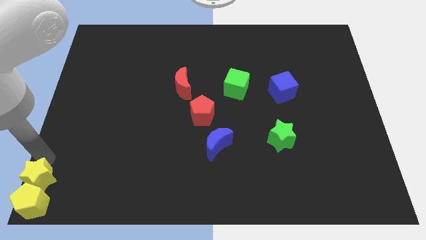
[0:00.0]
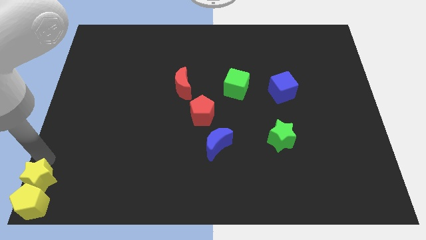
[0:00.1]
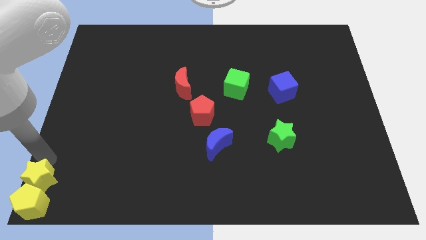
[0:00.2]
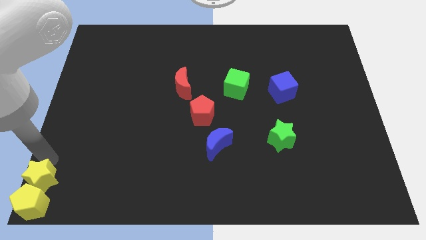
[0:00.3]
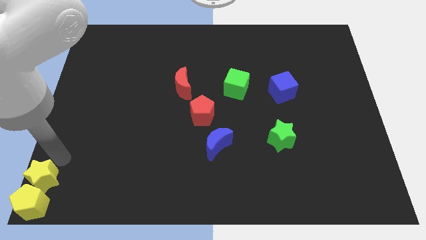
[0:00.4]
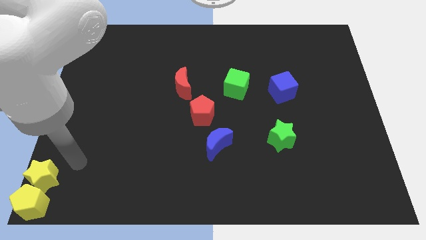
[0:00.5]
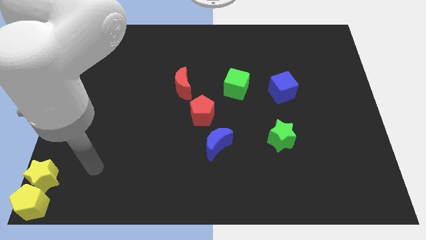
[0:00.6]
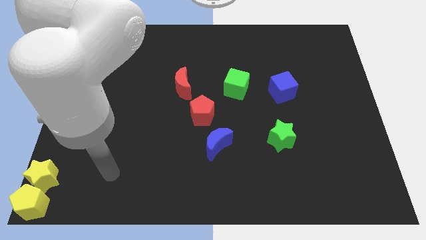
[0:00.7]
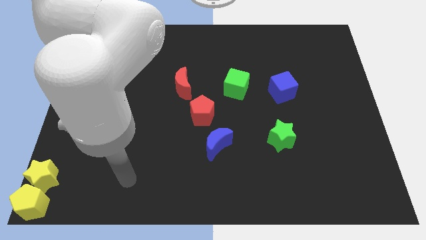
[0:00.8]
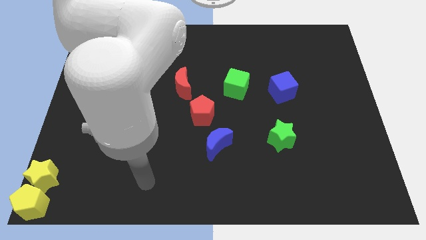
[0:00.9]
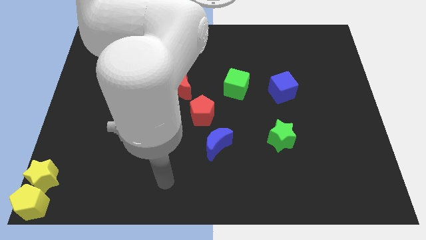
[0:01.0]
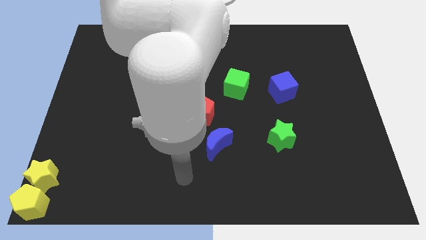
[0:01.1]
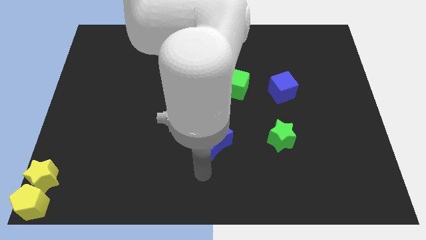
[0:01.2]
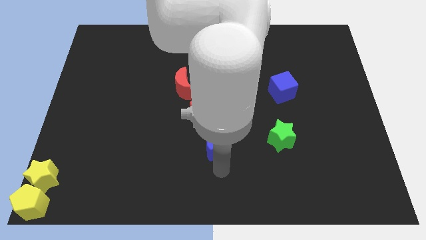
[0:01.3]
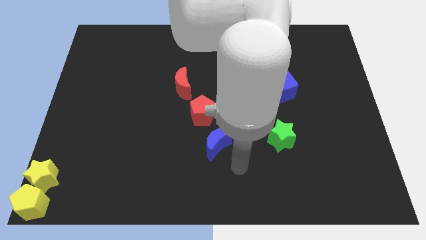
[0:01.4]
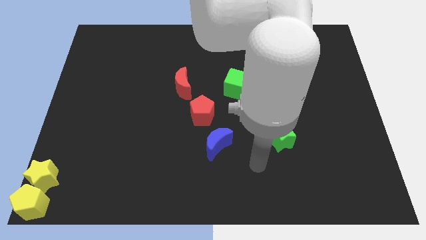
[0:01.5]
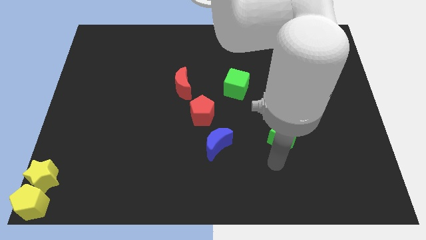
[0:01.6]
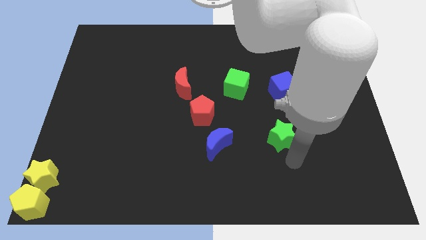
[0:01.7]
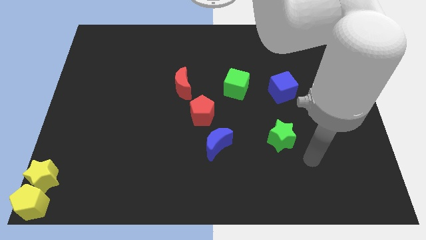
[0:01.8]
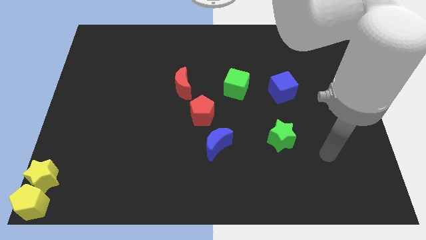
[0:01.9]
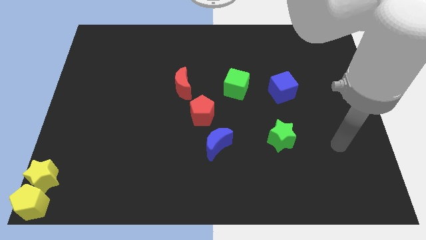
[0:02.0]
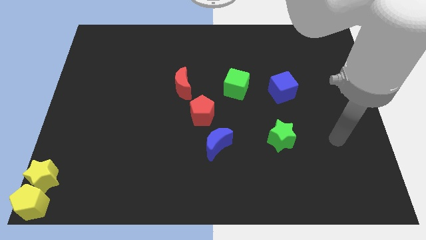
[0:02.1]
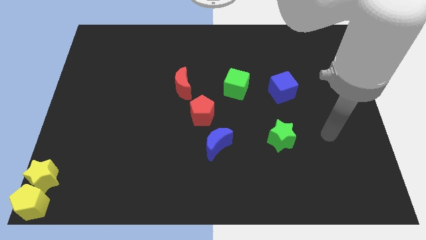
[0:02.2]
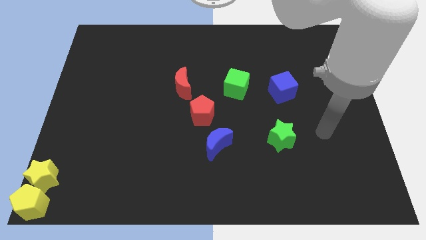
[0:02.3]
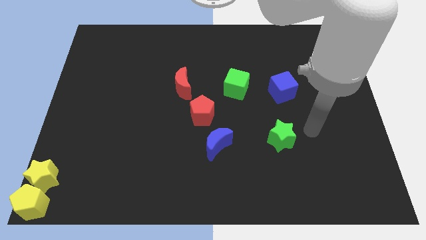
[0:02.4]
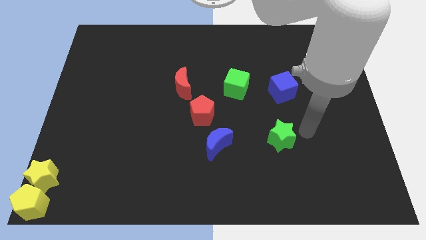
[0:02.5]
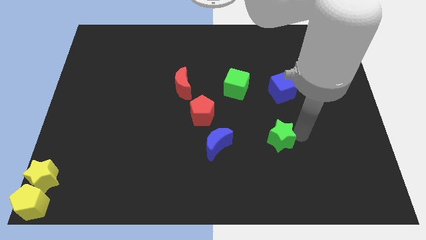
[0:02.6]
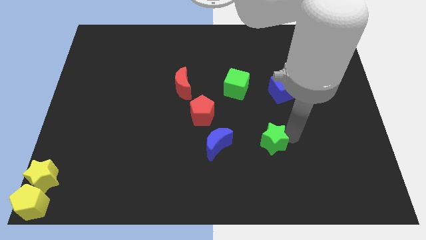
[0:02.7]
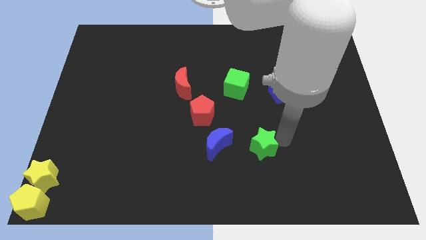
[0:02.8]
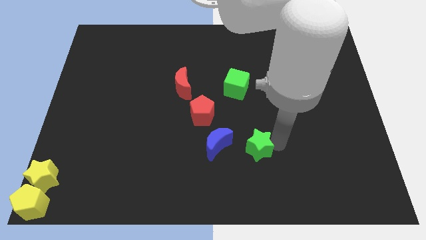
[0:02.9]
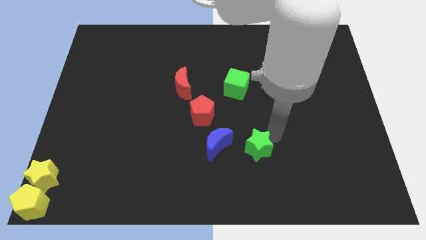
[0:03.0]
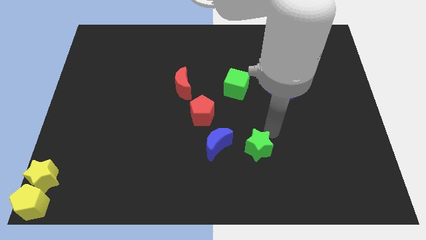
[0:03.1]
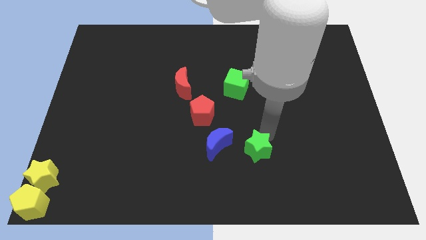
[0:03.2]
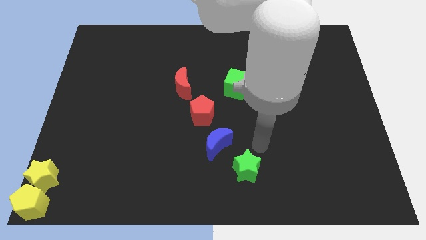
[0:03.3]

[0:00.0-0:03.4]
move the green star diagonal to the blue moon

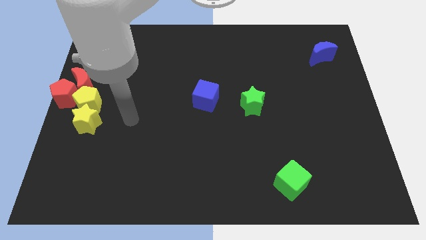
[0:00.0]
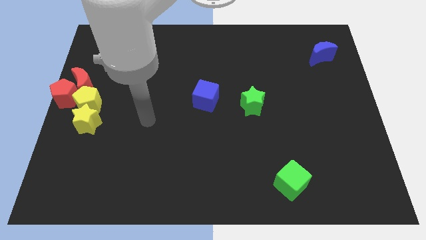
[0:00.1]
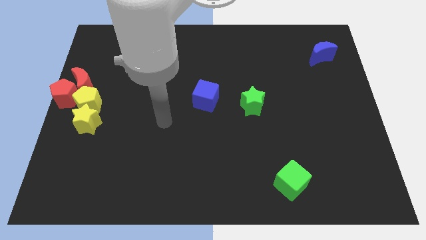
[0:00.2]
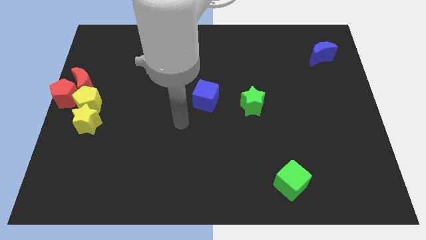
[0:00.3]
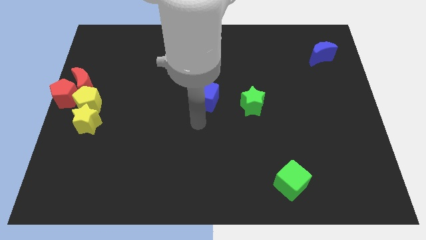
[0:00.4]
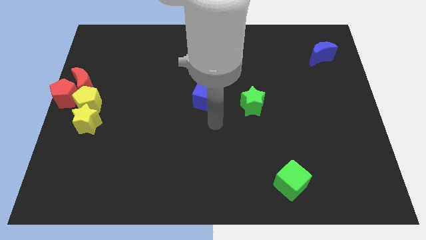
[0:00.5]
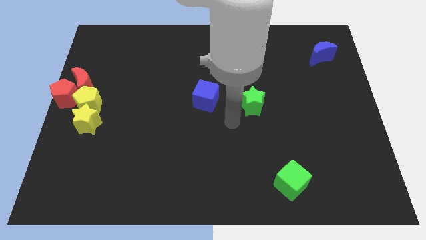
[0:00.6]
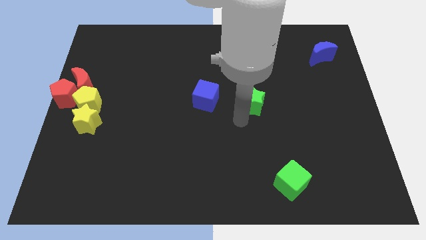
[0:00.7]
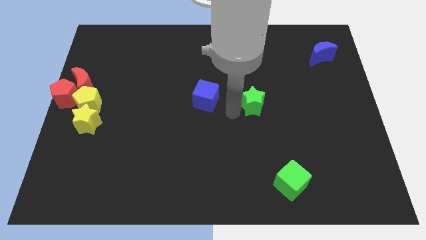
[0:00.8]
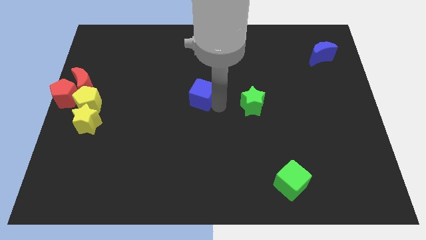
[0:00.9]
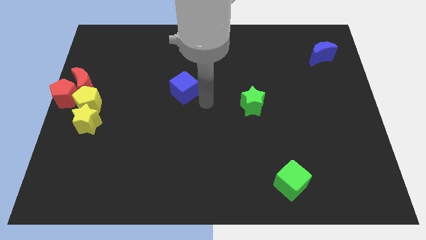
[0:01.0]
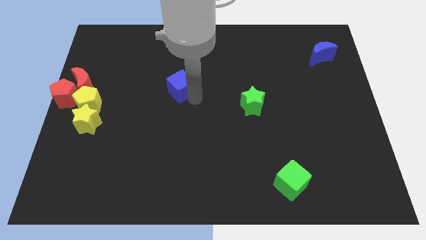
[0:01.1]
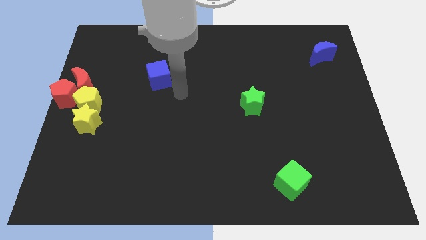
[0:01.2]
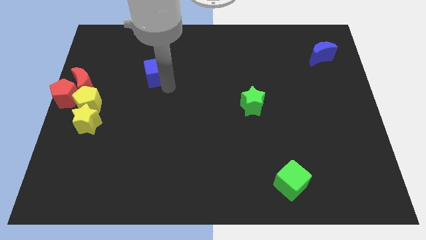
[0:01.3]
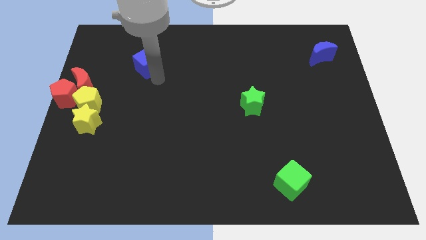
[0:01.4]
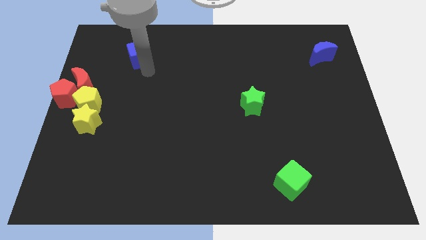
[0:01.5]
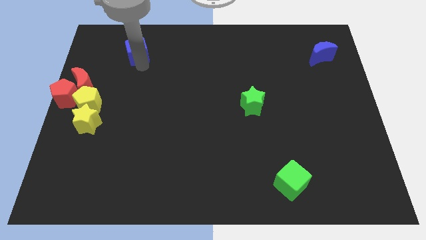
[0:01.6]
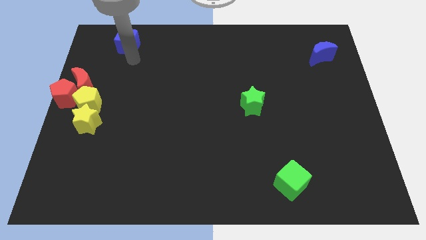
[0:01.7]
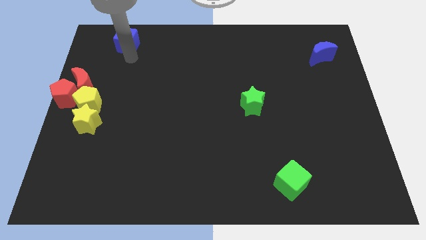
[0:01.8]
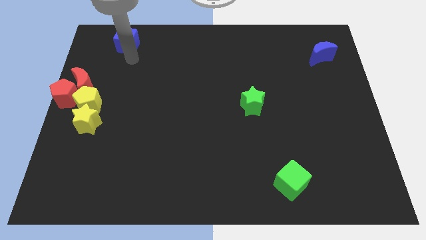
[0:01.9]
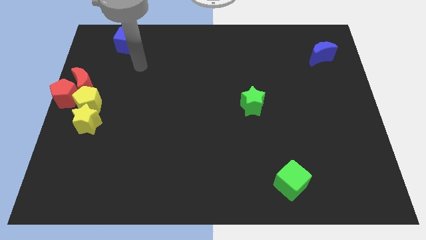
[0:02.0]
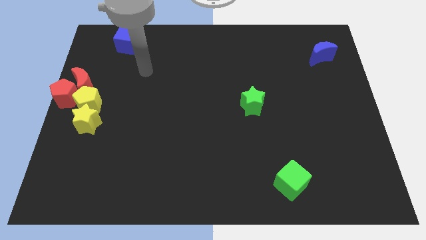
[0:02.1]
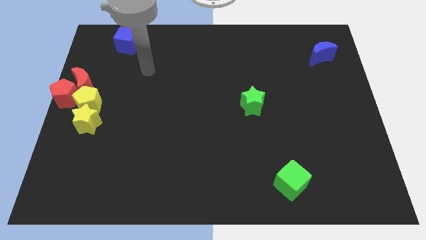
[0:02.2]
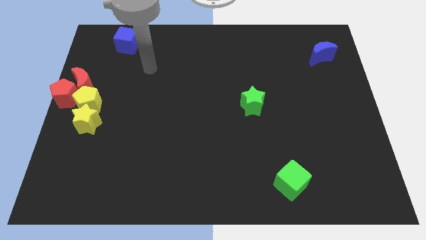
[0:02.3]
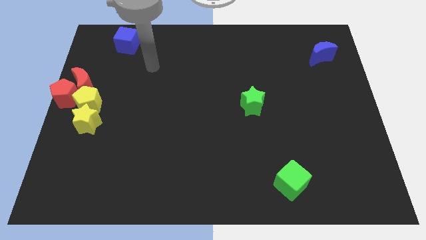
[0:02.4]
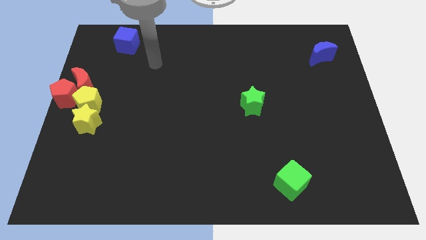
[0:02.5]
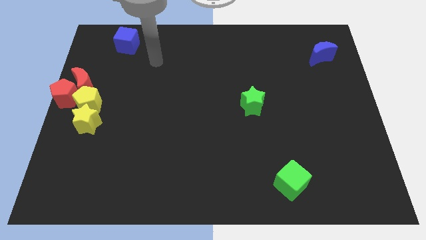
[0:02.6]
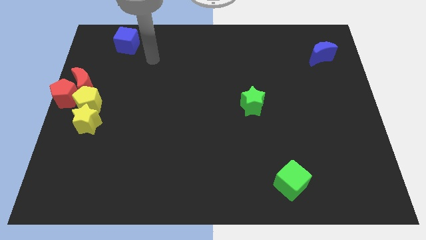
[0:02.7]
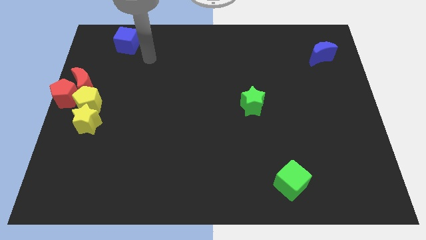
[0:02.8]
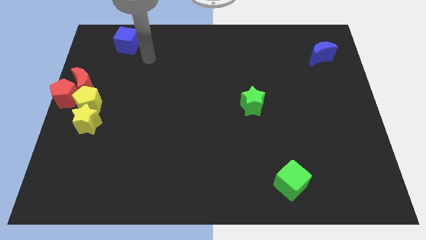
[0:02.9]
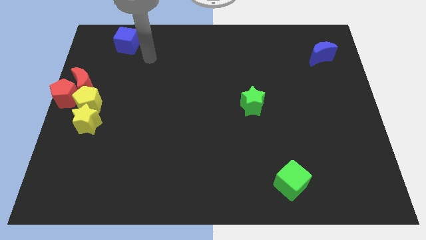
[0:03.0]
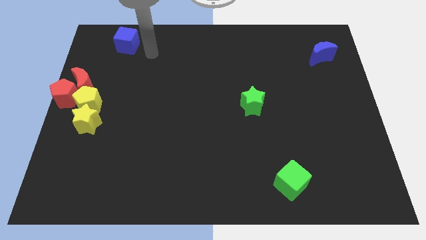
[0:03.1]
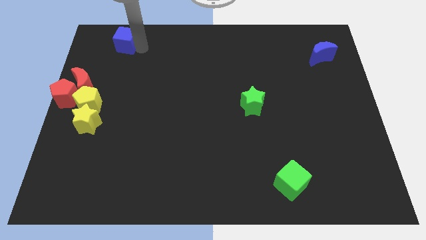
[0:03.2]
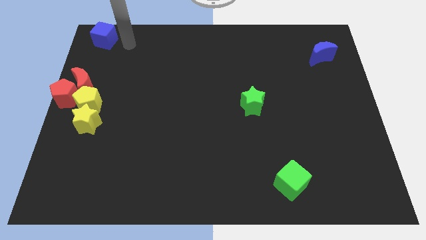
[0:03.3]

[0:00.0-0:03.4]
move the blue cube towards the top left corner of the board

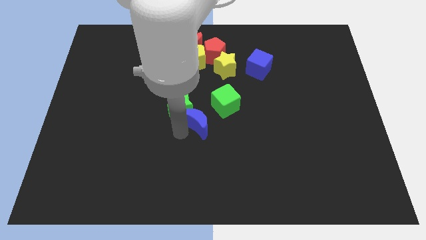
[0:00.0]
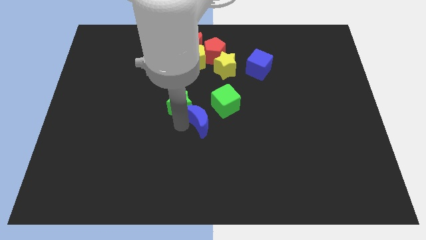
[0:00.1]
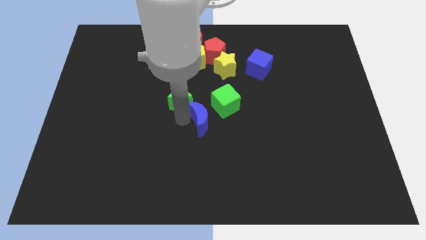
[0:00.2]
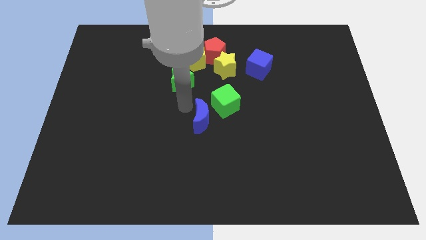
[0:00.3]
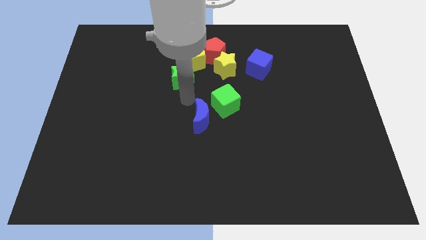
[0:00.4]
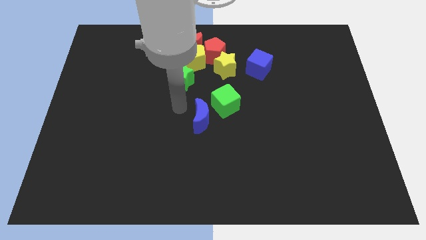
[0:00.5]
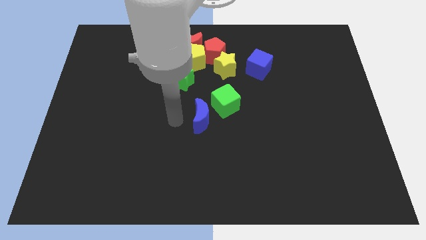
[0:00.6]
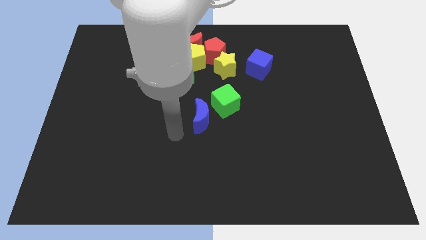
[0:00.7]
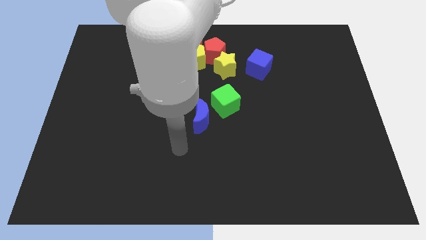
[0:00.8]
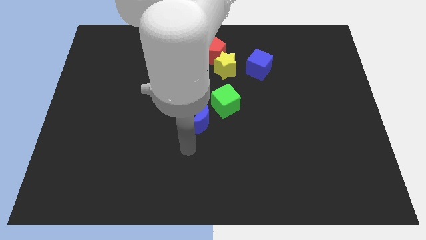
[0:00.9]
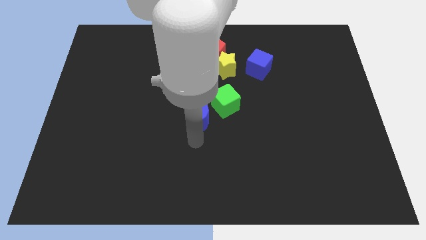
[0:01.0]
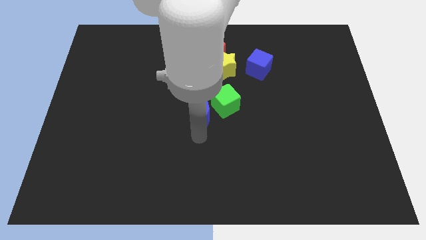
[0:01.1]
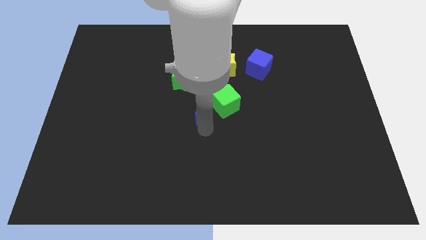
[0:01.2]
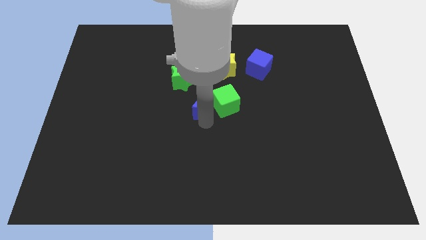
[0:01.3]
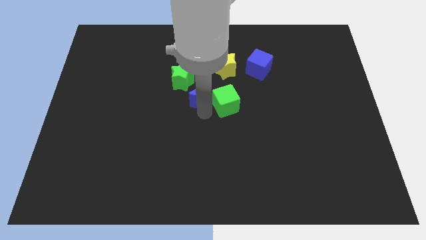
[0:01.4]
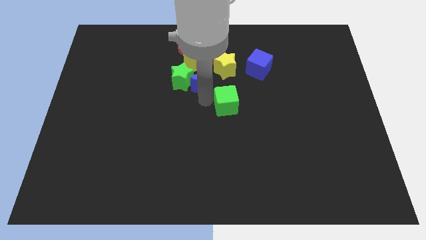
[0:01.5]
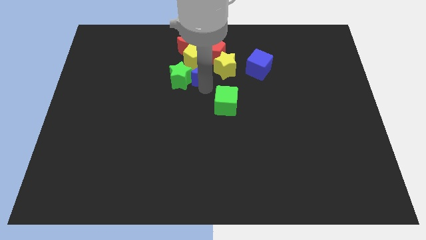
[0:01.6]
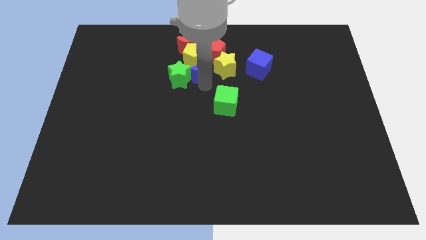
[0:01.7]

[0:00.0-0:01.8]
move the green star and blue crescent into the group of blocks

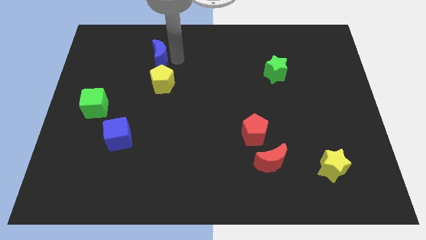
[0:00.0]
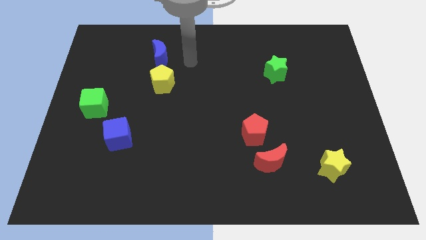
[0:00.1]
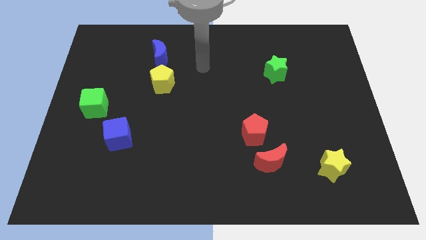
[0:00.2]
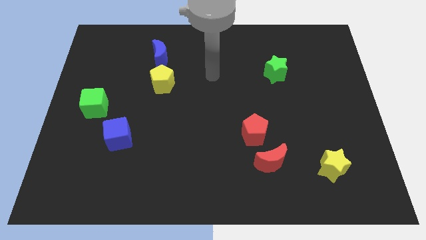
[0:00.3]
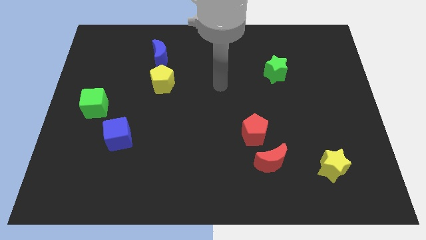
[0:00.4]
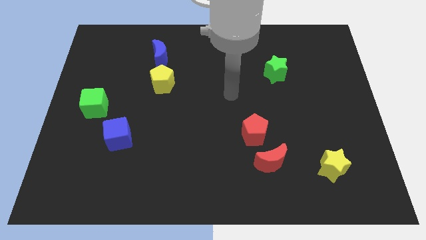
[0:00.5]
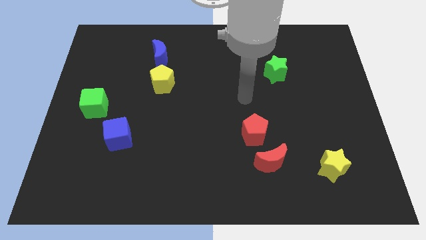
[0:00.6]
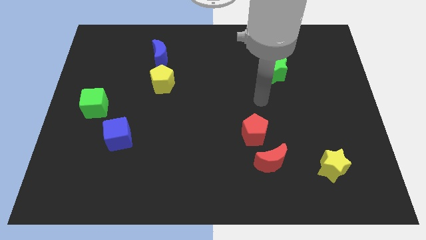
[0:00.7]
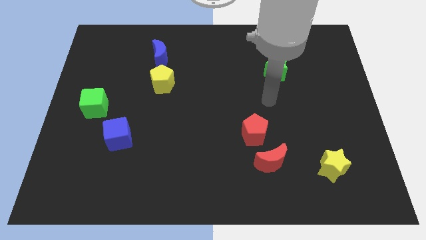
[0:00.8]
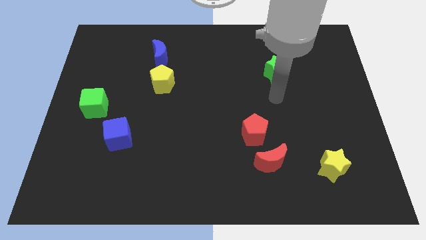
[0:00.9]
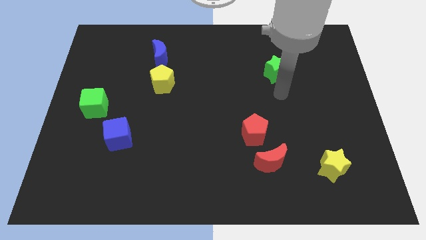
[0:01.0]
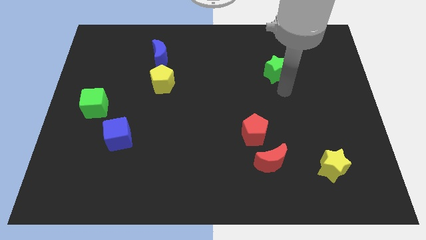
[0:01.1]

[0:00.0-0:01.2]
move your arm to the bottom of the green star
